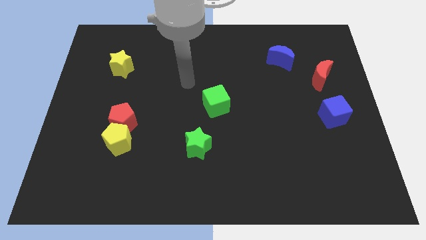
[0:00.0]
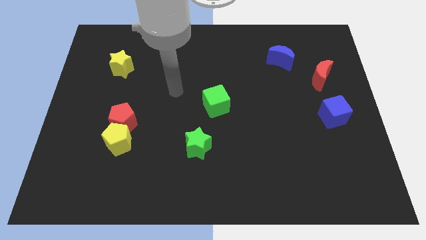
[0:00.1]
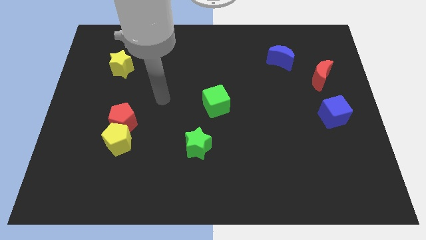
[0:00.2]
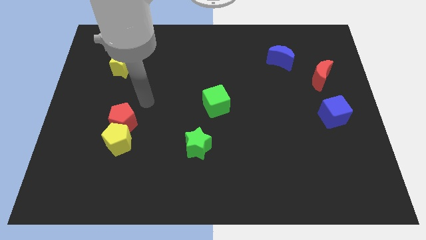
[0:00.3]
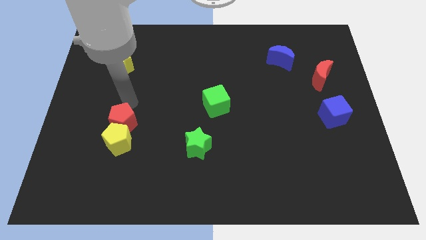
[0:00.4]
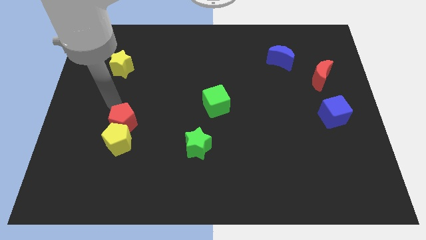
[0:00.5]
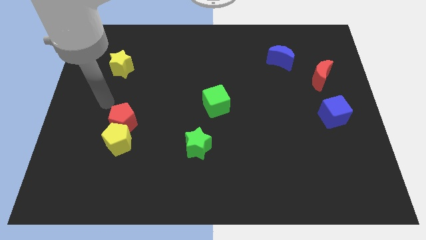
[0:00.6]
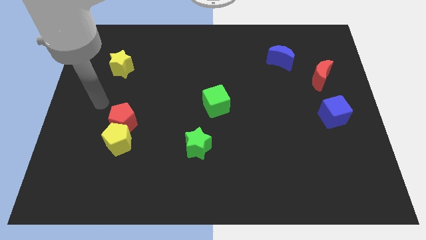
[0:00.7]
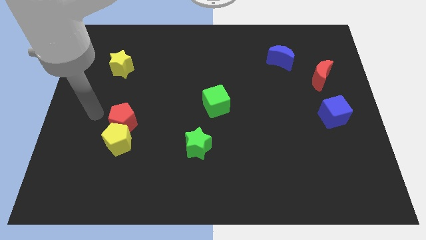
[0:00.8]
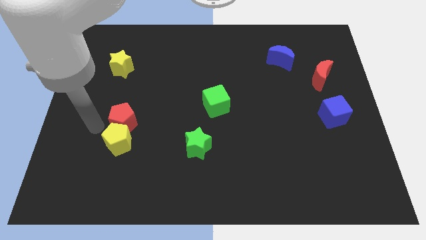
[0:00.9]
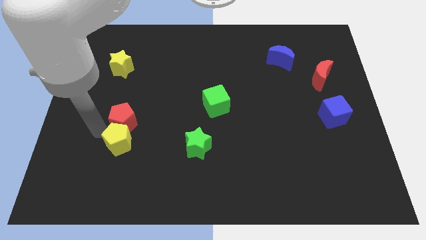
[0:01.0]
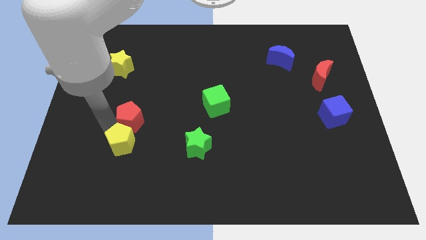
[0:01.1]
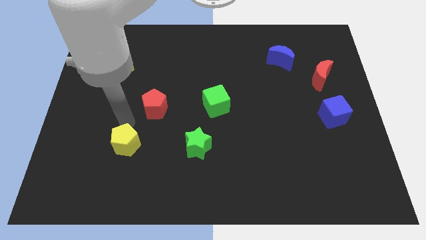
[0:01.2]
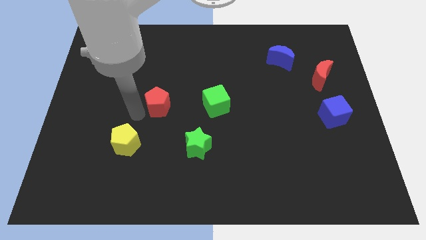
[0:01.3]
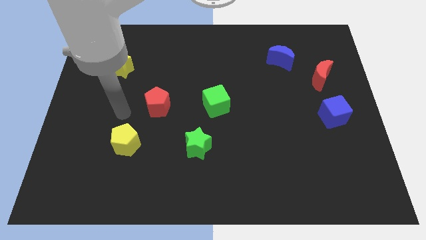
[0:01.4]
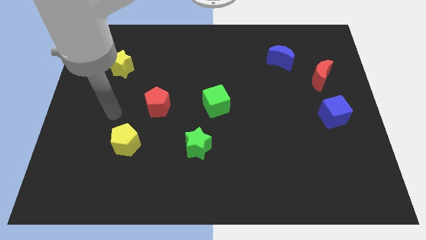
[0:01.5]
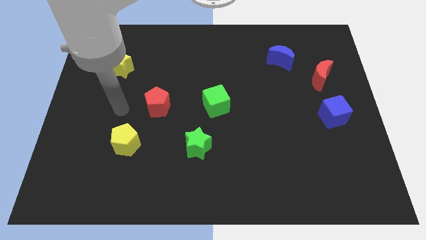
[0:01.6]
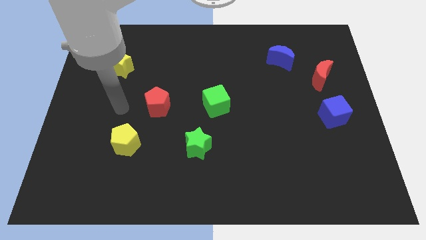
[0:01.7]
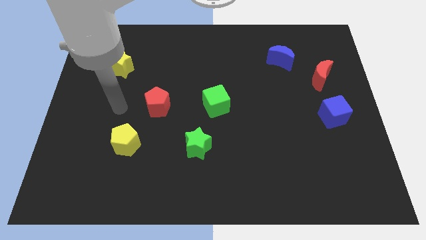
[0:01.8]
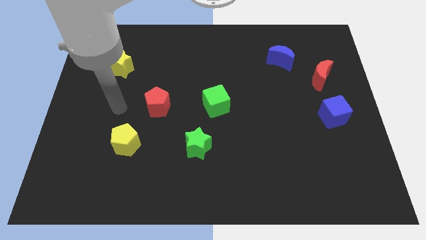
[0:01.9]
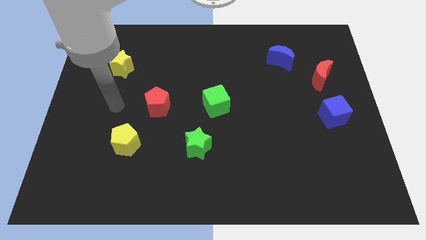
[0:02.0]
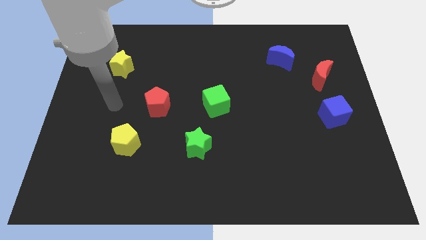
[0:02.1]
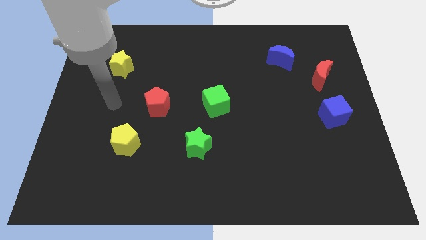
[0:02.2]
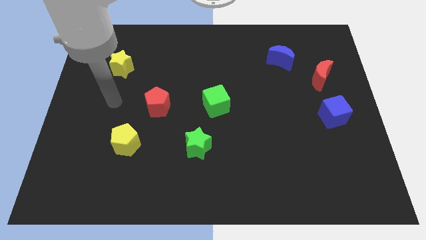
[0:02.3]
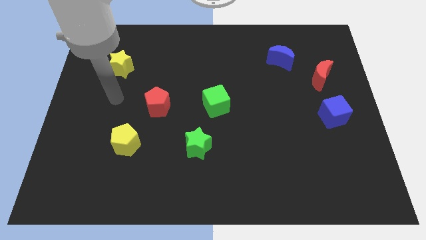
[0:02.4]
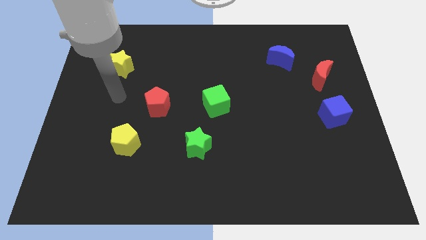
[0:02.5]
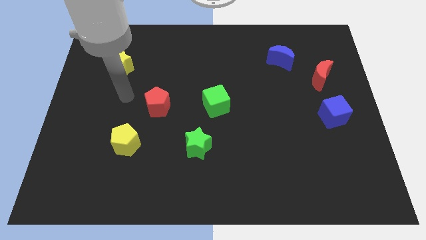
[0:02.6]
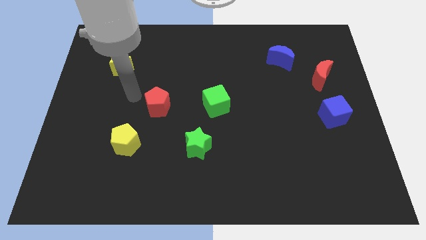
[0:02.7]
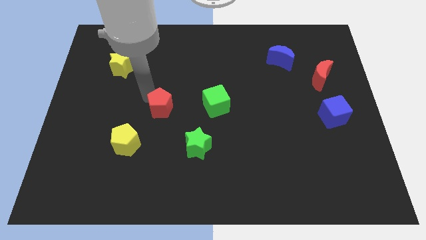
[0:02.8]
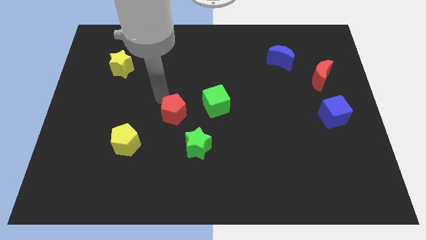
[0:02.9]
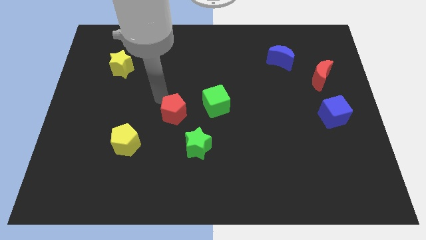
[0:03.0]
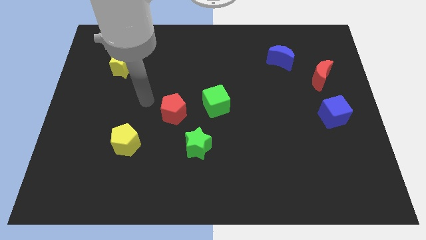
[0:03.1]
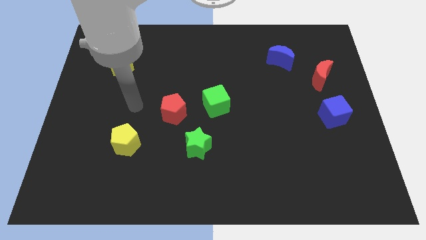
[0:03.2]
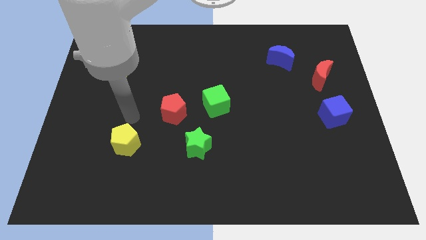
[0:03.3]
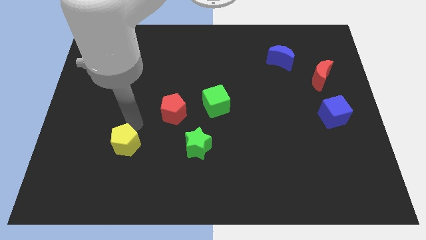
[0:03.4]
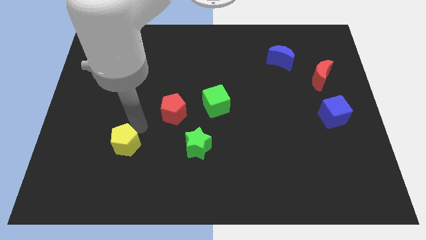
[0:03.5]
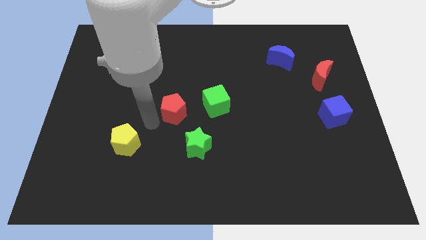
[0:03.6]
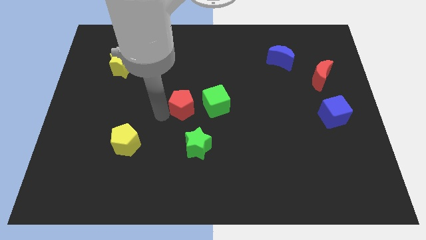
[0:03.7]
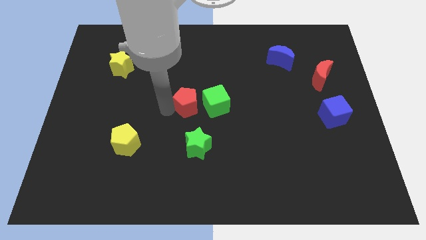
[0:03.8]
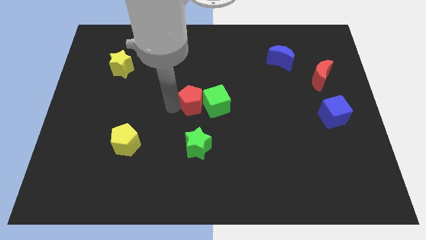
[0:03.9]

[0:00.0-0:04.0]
move the red pentagon to the left of the green cube

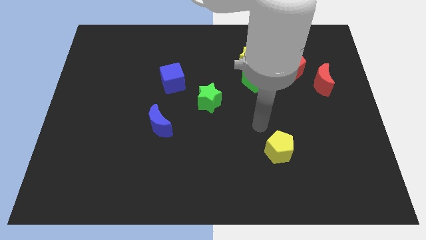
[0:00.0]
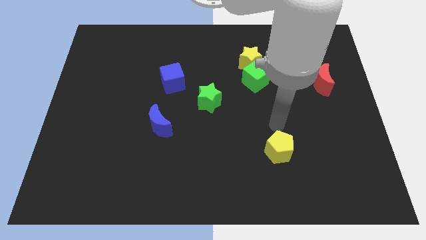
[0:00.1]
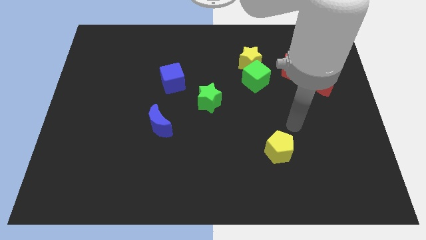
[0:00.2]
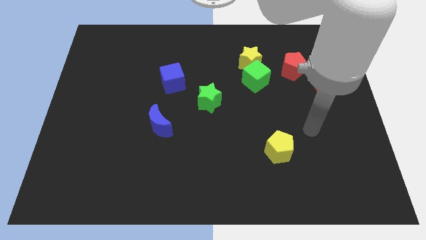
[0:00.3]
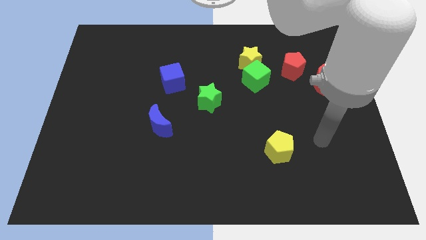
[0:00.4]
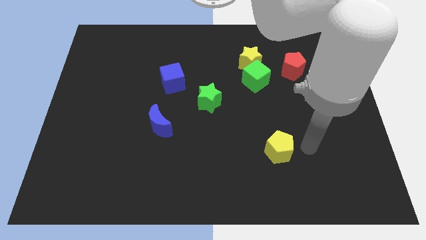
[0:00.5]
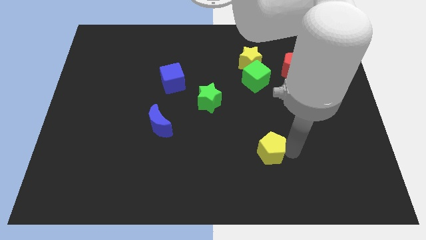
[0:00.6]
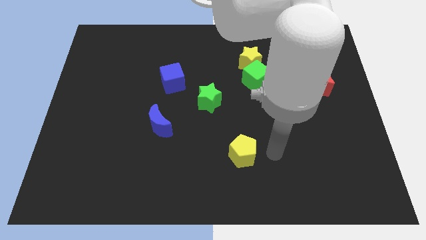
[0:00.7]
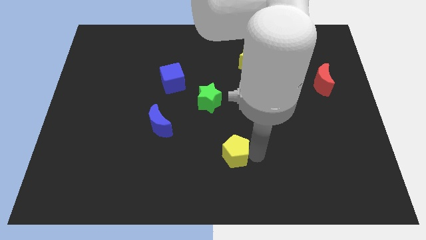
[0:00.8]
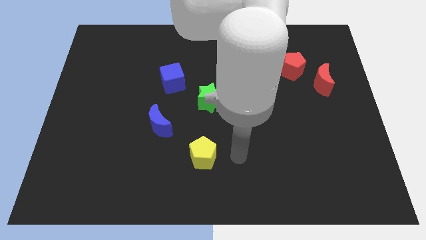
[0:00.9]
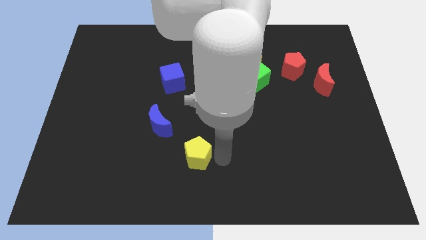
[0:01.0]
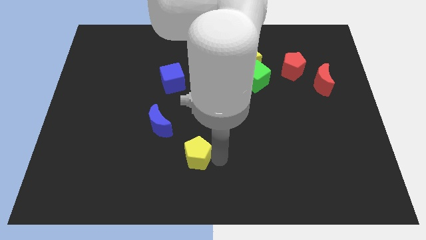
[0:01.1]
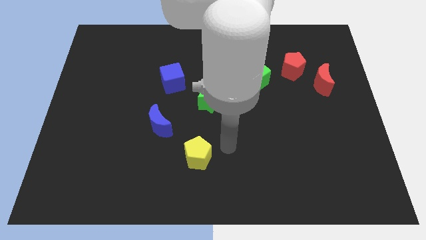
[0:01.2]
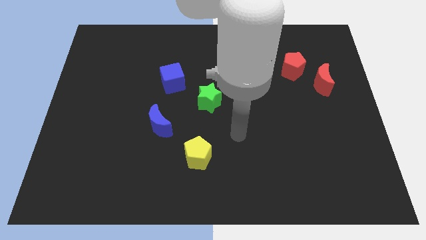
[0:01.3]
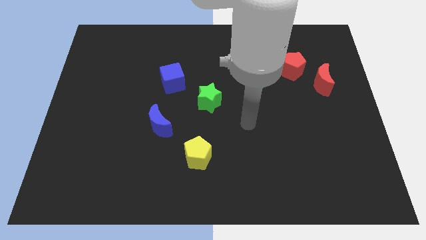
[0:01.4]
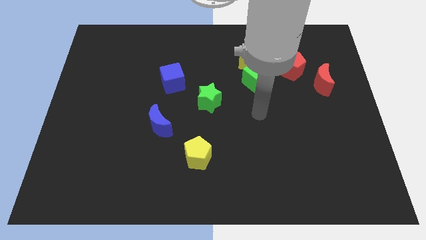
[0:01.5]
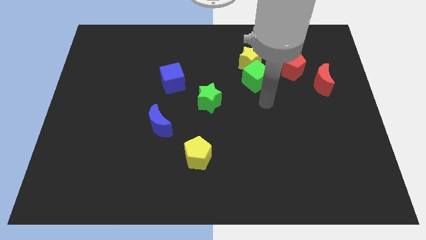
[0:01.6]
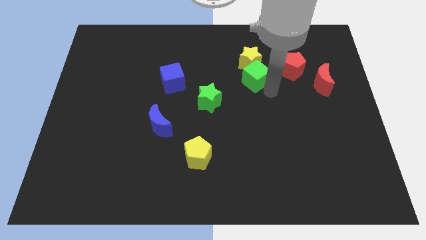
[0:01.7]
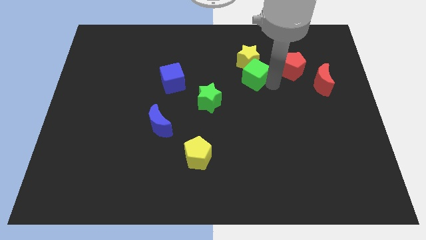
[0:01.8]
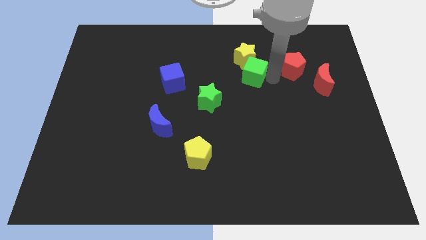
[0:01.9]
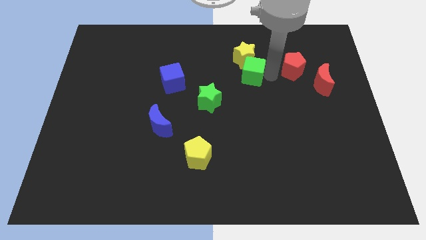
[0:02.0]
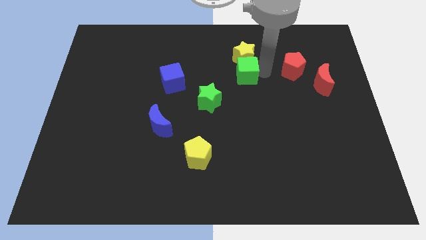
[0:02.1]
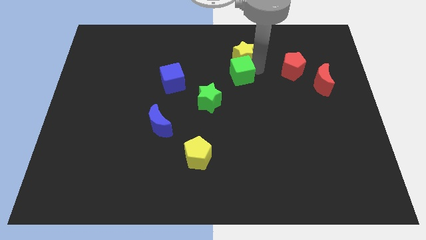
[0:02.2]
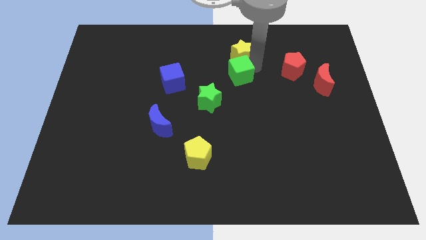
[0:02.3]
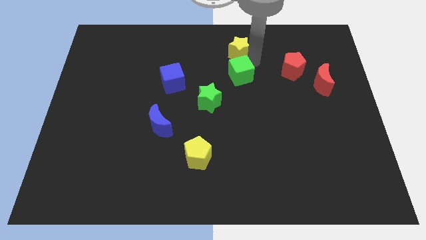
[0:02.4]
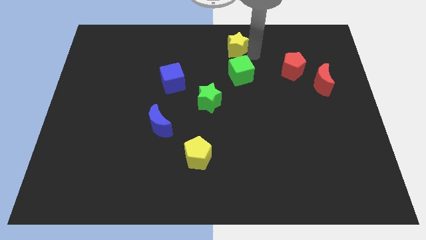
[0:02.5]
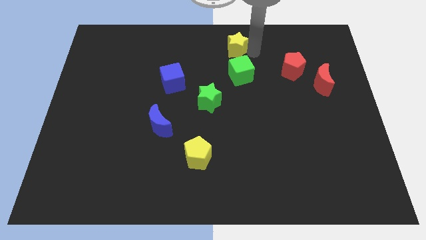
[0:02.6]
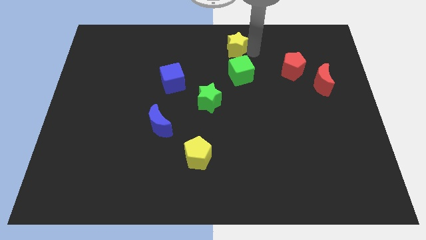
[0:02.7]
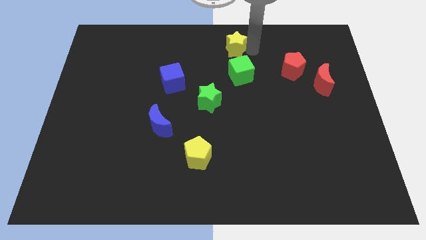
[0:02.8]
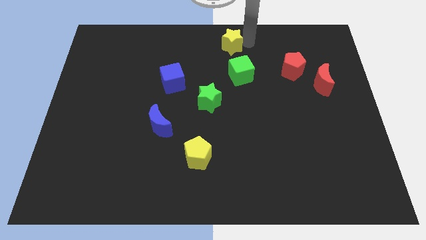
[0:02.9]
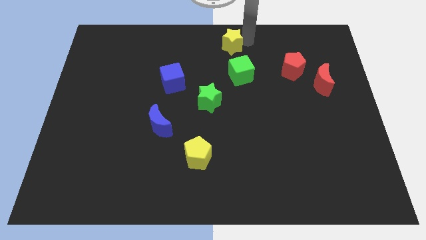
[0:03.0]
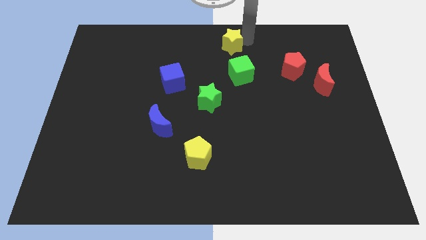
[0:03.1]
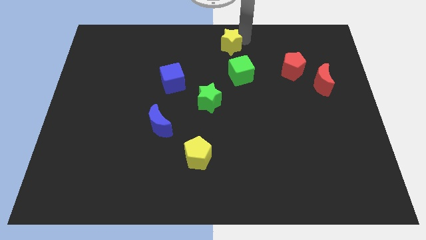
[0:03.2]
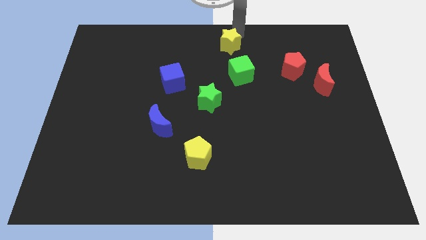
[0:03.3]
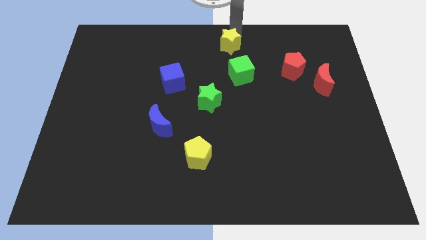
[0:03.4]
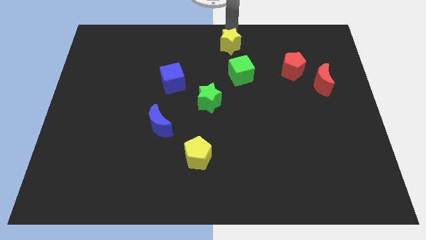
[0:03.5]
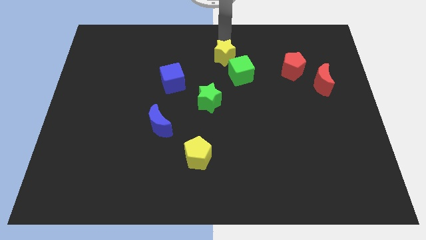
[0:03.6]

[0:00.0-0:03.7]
push the yellow pentagon towards the bottom right to the blue crescent

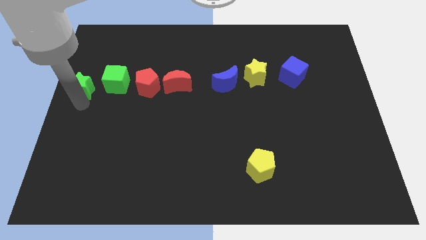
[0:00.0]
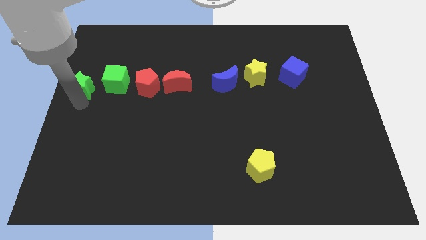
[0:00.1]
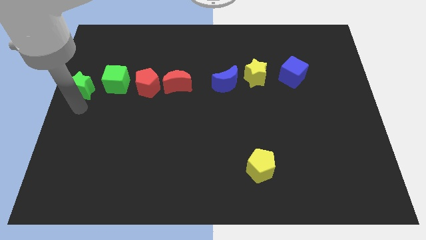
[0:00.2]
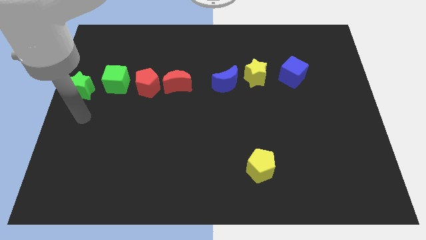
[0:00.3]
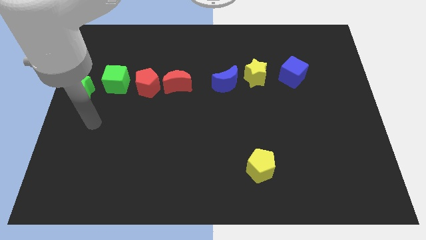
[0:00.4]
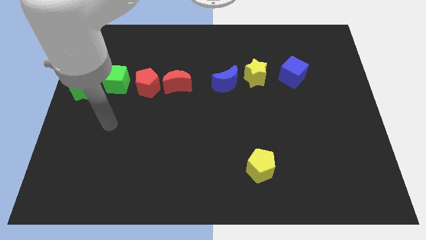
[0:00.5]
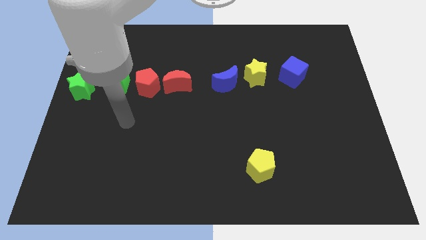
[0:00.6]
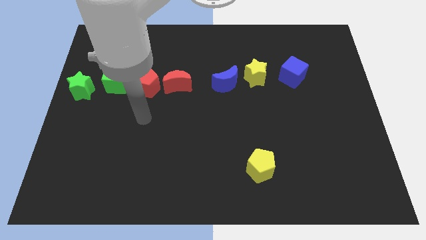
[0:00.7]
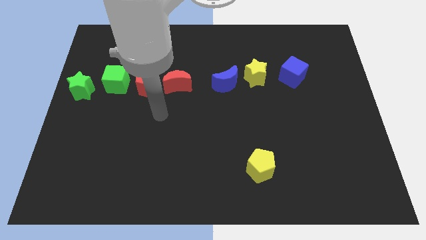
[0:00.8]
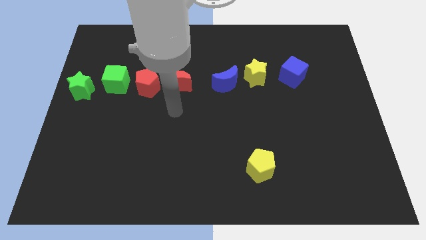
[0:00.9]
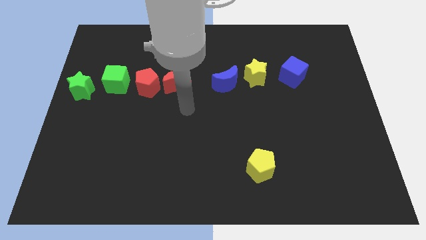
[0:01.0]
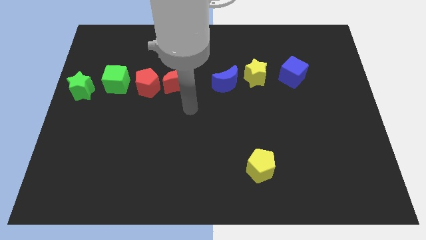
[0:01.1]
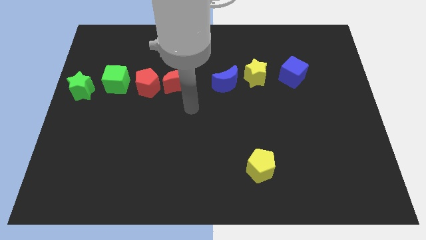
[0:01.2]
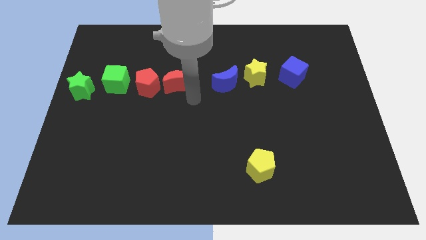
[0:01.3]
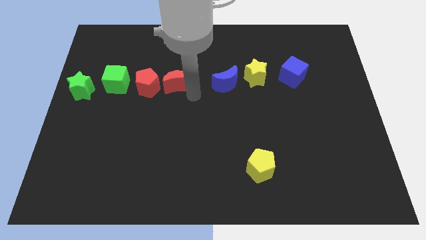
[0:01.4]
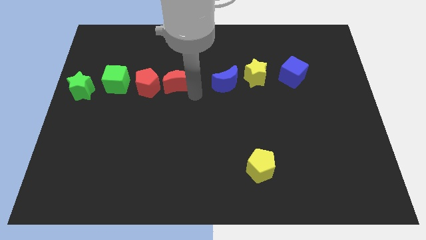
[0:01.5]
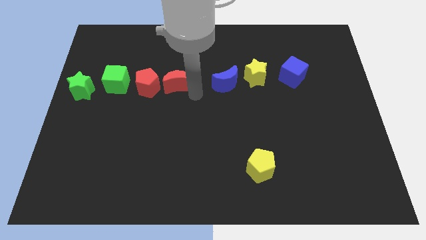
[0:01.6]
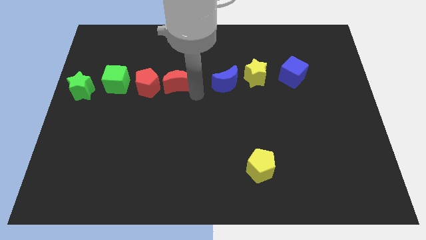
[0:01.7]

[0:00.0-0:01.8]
move the green star to the left slightly
